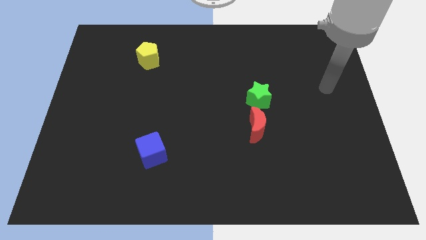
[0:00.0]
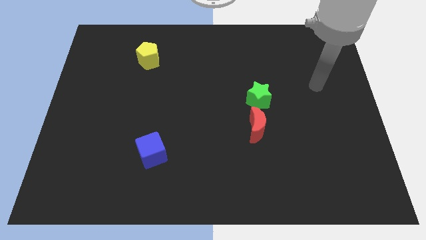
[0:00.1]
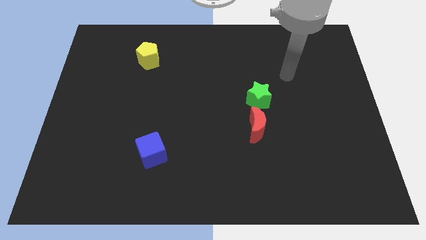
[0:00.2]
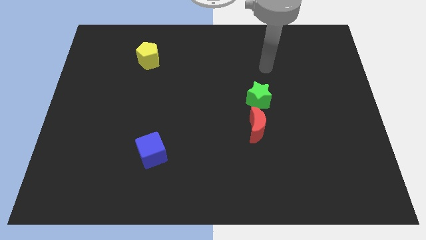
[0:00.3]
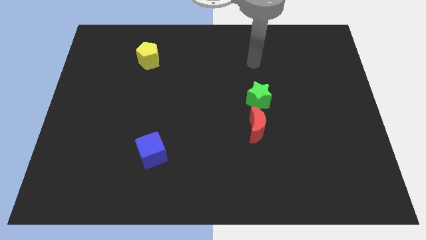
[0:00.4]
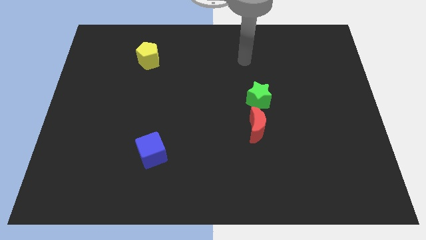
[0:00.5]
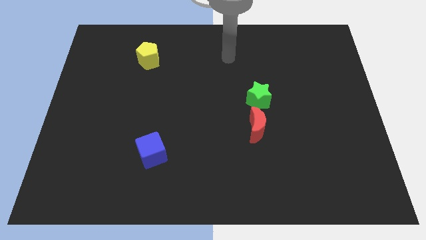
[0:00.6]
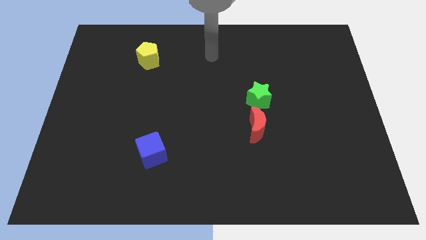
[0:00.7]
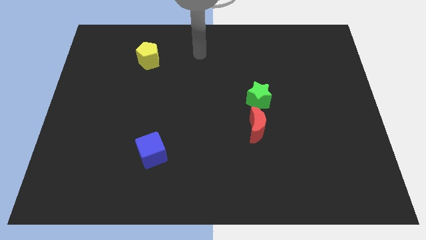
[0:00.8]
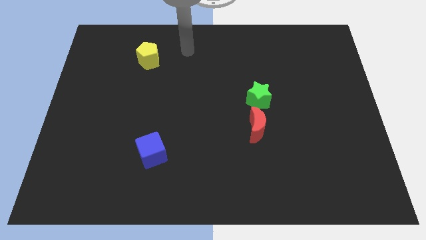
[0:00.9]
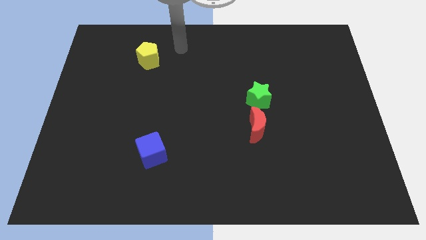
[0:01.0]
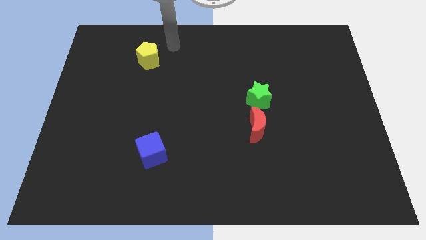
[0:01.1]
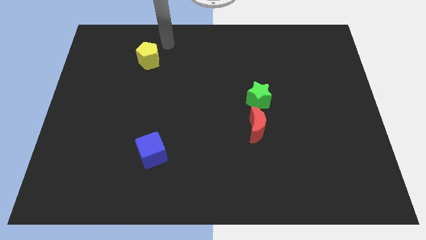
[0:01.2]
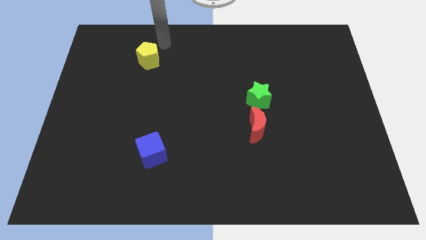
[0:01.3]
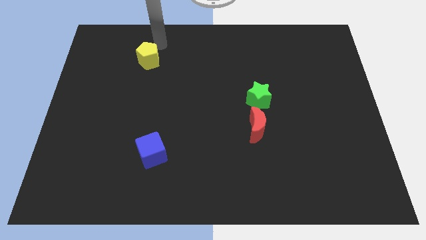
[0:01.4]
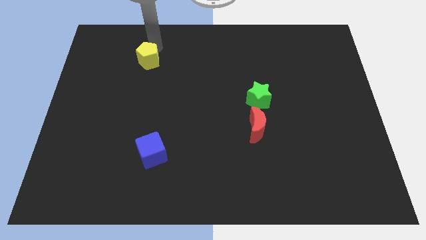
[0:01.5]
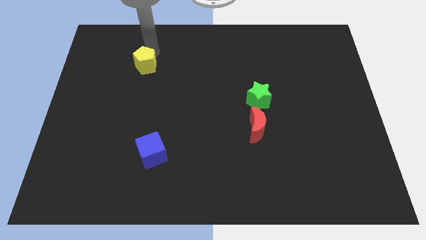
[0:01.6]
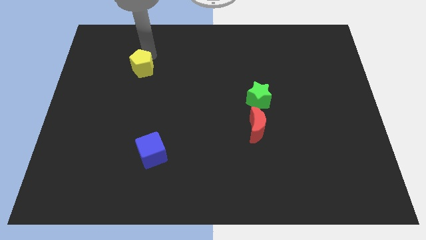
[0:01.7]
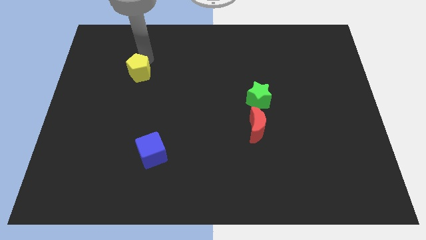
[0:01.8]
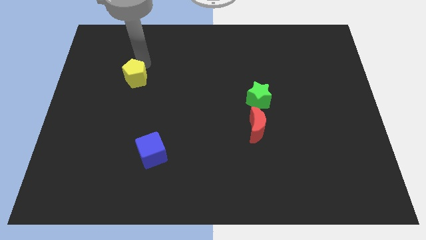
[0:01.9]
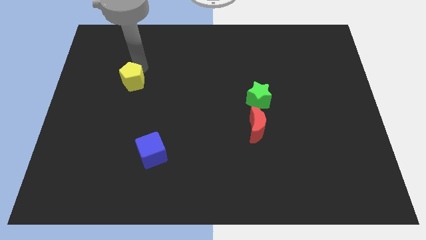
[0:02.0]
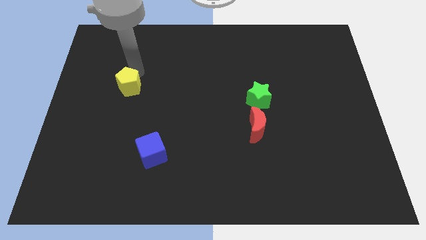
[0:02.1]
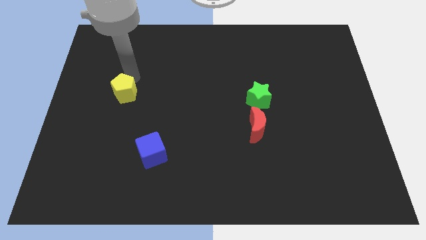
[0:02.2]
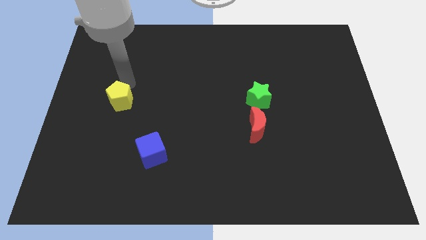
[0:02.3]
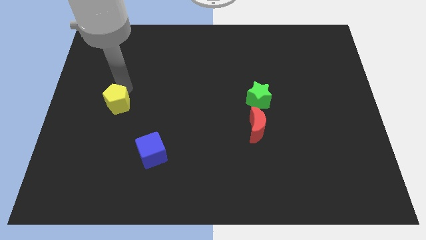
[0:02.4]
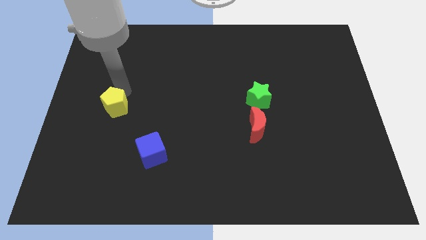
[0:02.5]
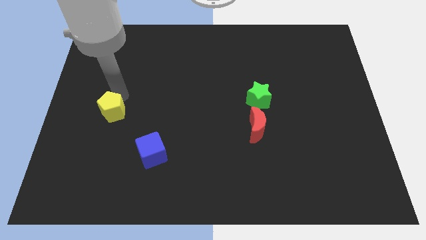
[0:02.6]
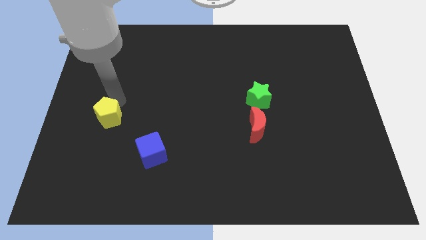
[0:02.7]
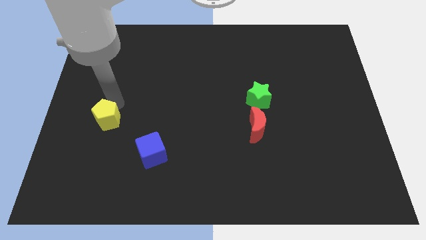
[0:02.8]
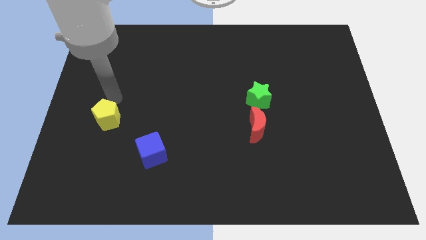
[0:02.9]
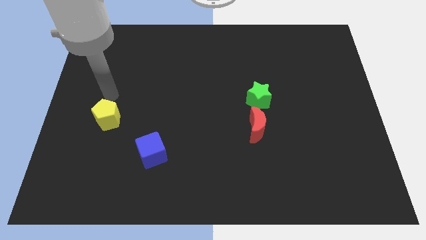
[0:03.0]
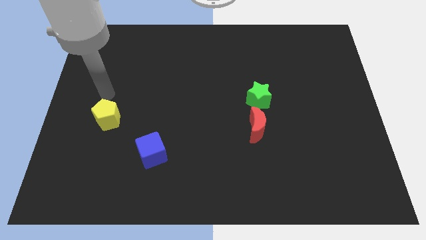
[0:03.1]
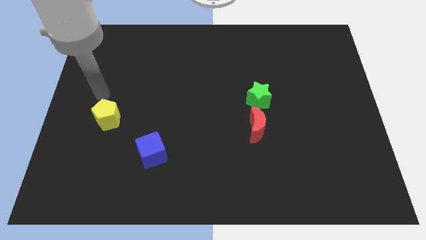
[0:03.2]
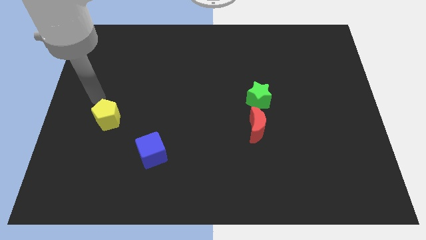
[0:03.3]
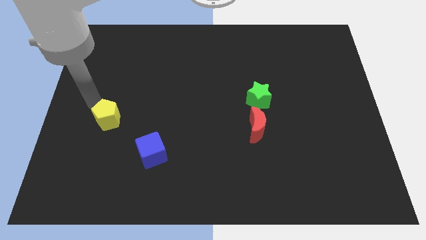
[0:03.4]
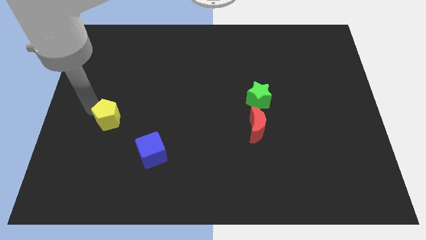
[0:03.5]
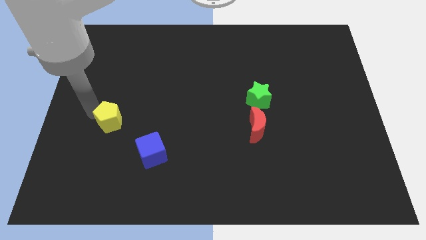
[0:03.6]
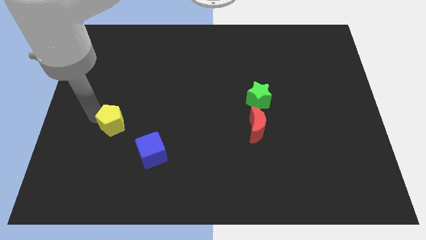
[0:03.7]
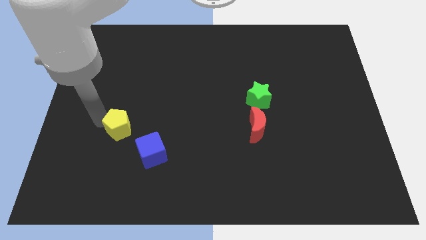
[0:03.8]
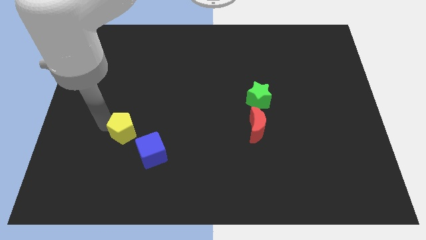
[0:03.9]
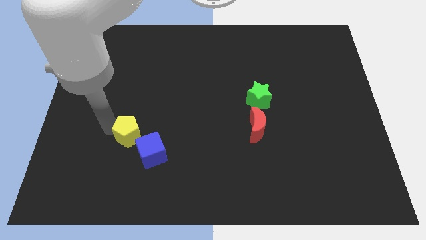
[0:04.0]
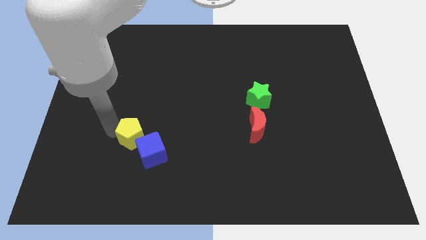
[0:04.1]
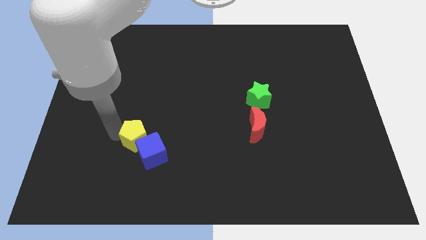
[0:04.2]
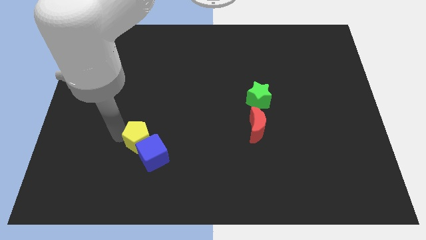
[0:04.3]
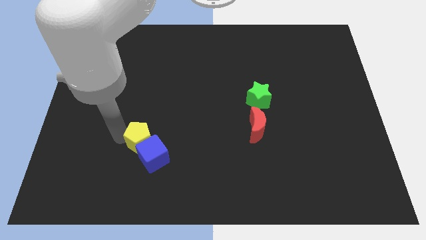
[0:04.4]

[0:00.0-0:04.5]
slide the pentagon next to the blue block

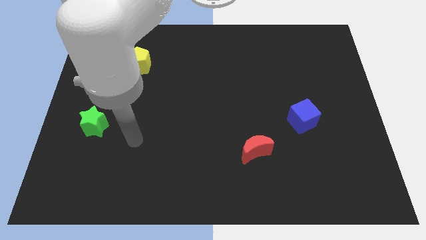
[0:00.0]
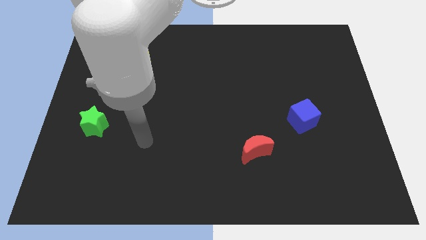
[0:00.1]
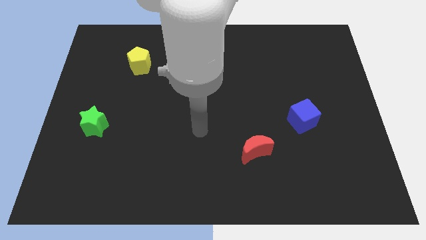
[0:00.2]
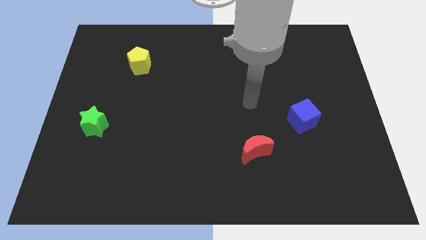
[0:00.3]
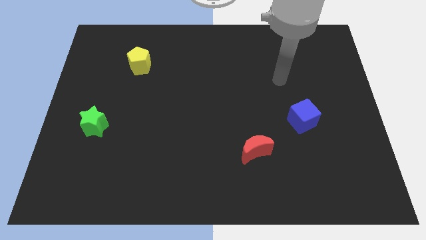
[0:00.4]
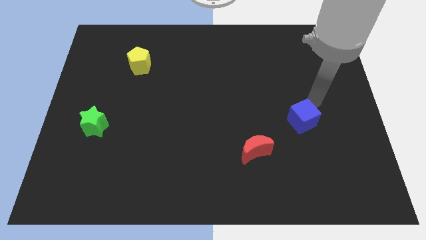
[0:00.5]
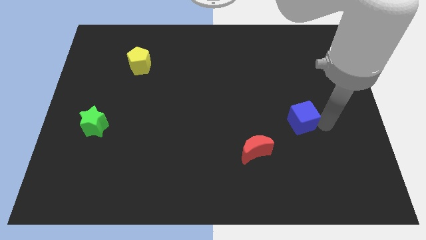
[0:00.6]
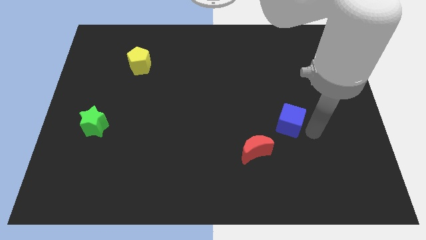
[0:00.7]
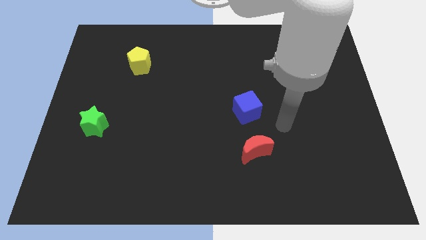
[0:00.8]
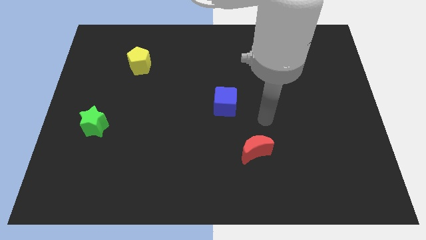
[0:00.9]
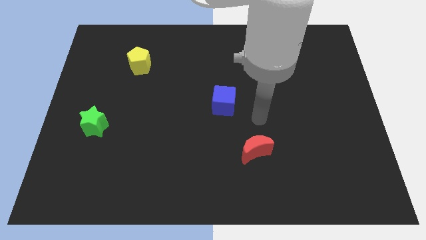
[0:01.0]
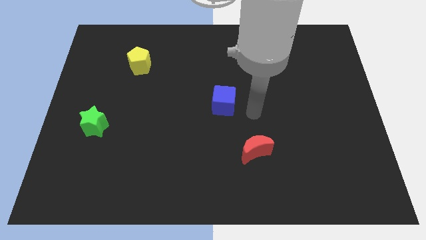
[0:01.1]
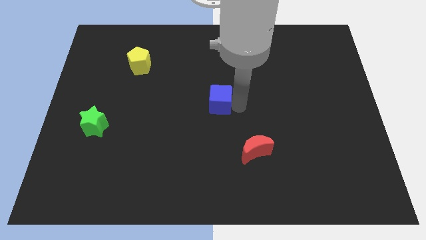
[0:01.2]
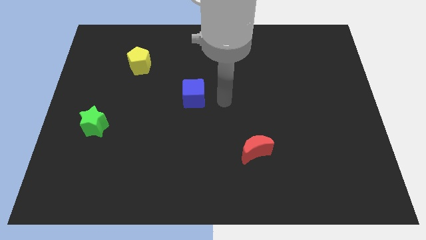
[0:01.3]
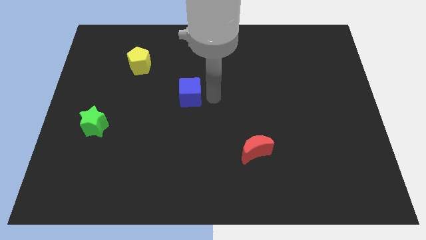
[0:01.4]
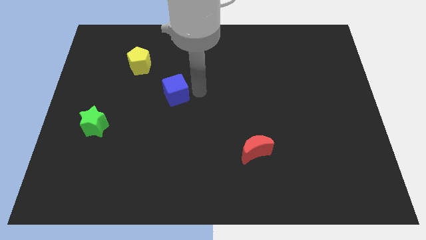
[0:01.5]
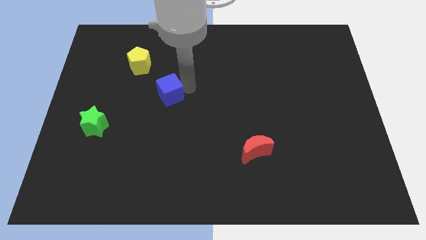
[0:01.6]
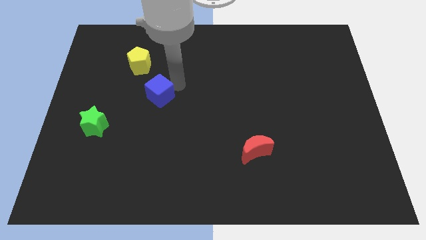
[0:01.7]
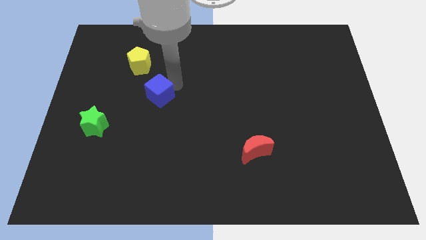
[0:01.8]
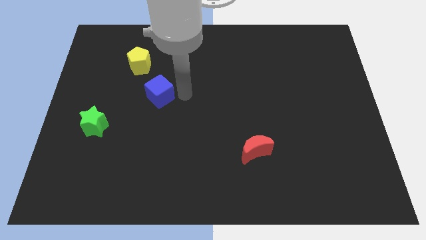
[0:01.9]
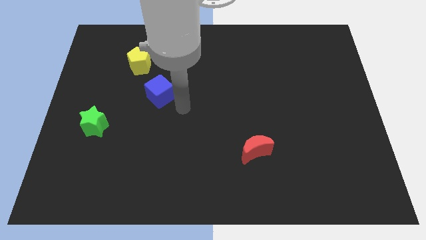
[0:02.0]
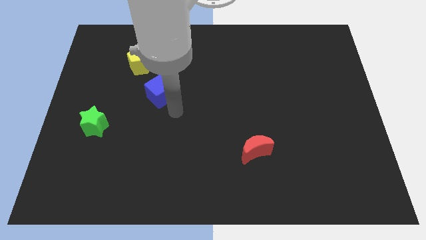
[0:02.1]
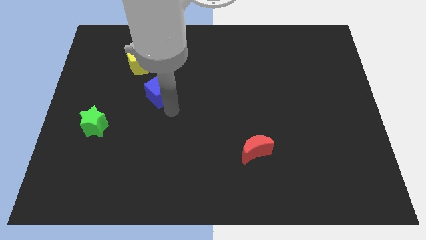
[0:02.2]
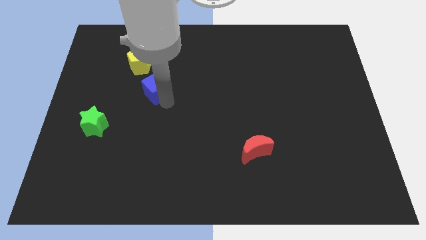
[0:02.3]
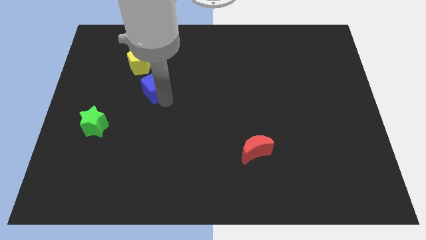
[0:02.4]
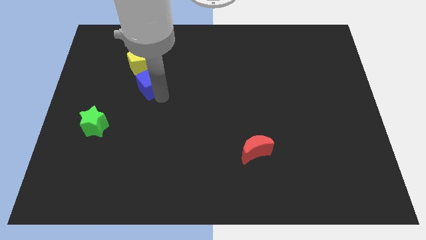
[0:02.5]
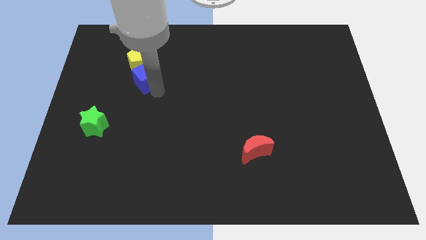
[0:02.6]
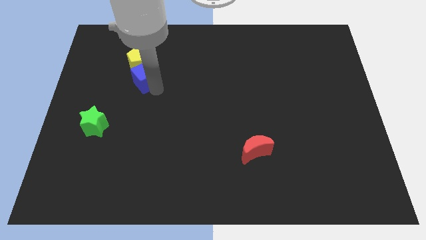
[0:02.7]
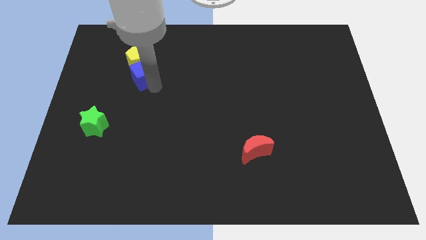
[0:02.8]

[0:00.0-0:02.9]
move the cube close to the yellow pentagon

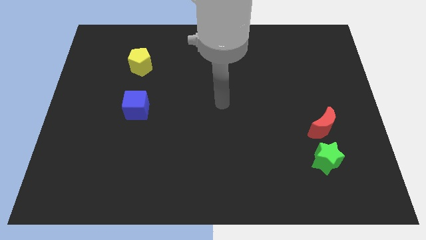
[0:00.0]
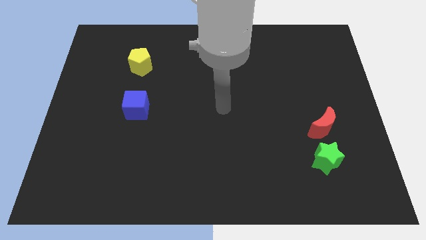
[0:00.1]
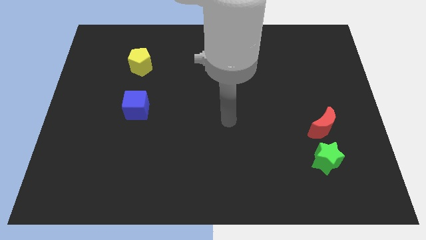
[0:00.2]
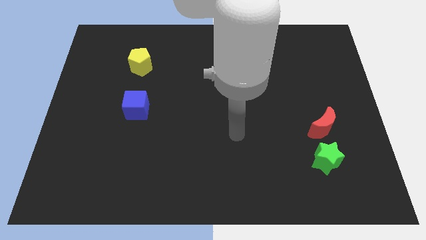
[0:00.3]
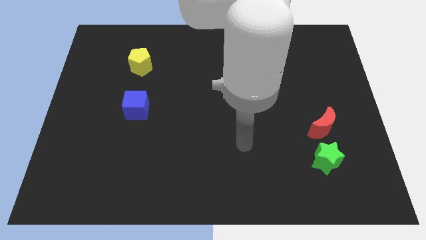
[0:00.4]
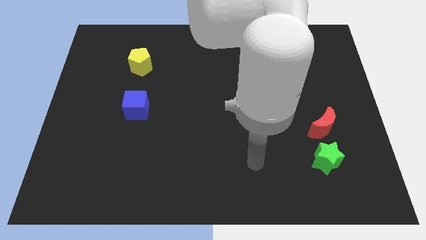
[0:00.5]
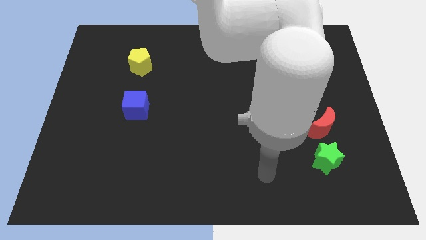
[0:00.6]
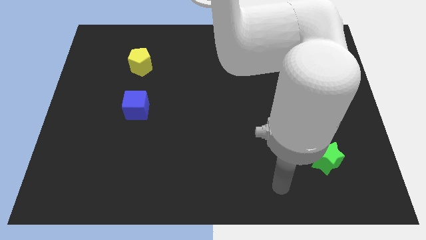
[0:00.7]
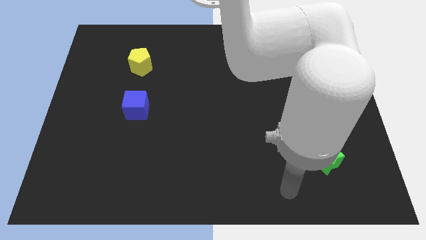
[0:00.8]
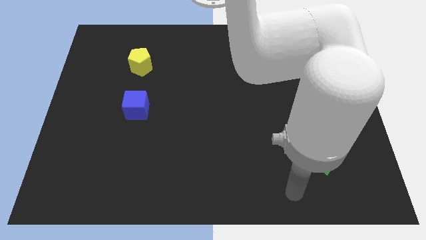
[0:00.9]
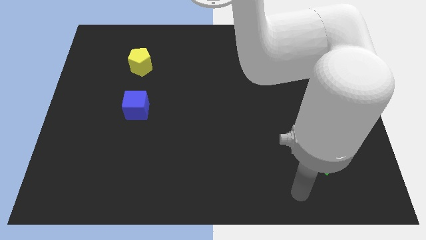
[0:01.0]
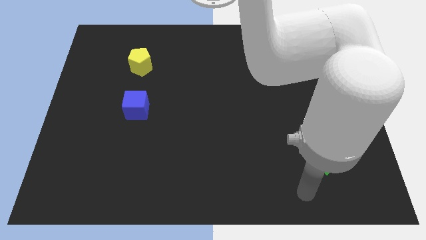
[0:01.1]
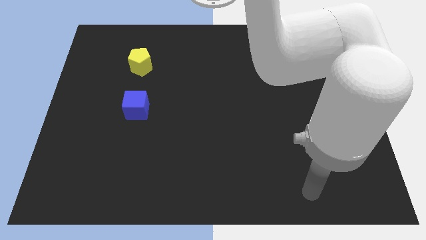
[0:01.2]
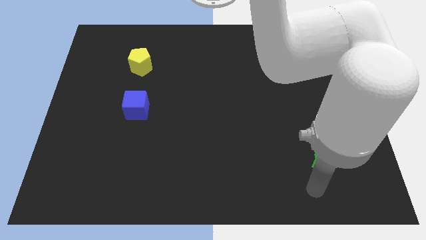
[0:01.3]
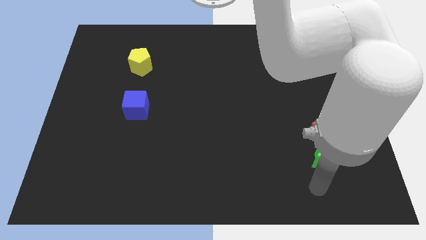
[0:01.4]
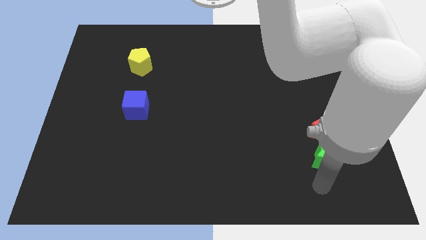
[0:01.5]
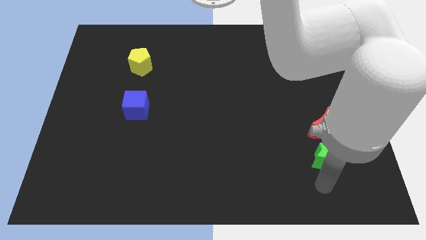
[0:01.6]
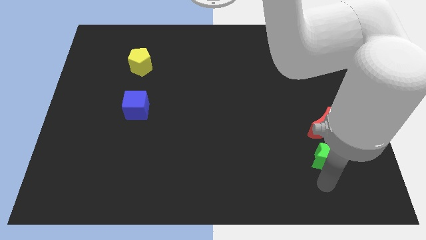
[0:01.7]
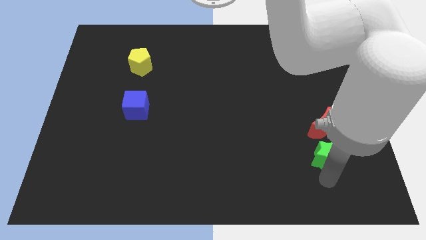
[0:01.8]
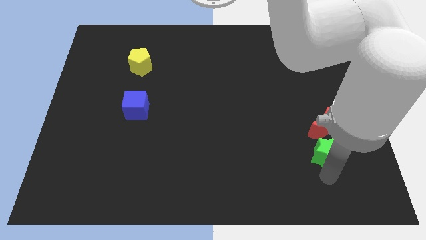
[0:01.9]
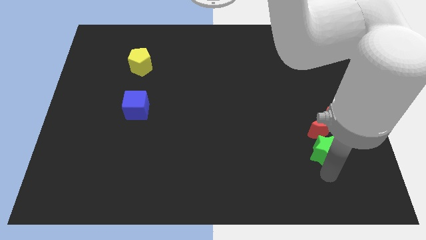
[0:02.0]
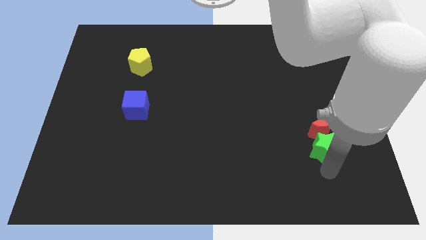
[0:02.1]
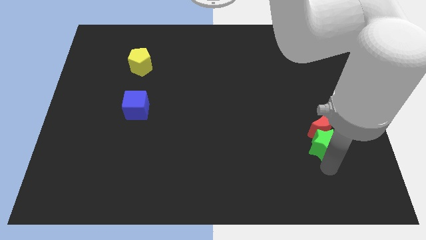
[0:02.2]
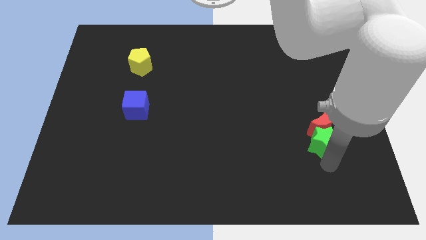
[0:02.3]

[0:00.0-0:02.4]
move the green star next to the red moon
